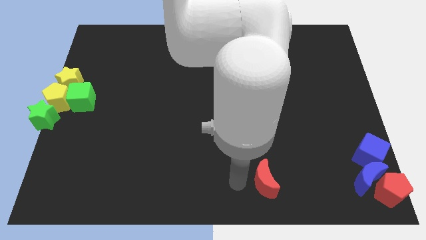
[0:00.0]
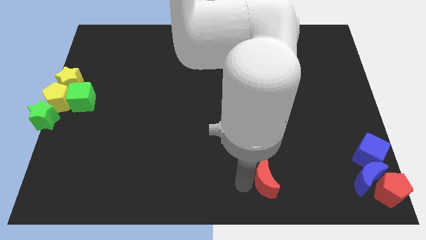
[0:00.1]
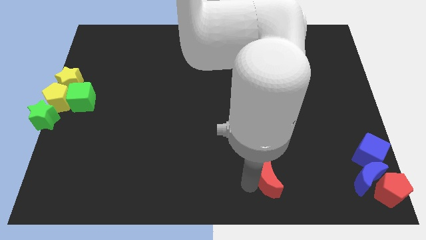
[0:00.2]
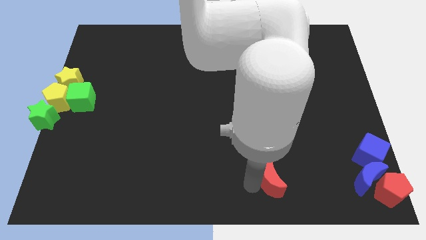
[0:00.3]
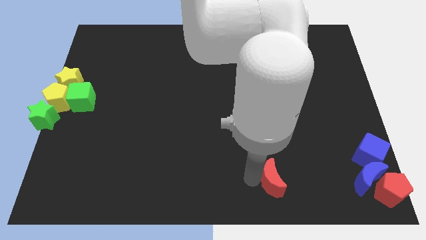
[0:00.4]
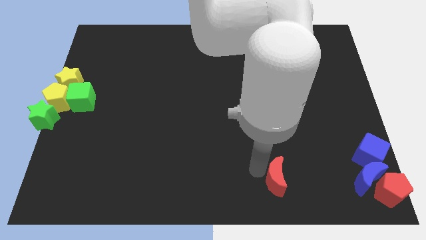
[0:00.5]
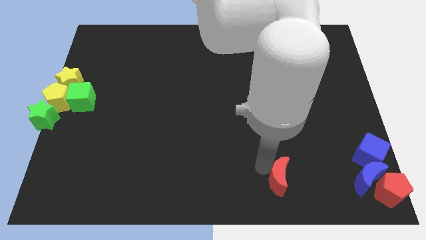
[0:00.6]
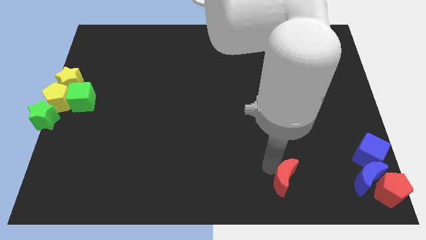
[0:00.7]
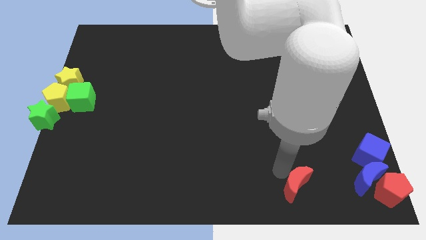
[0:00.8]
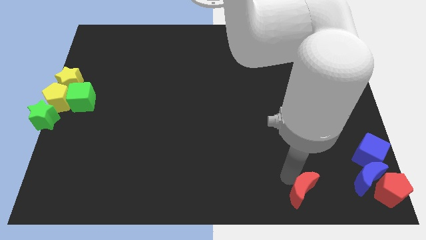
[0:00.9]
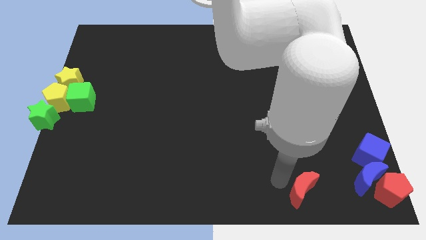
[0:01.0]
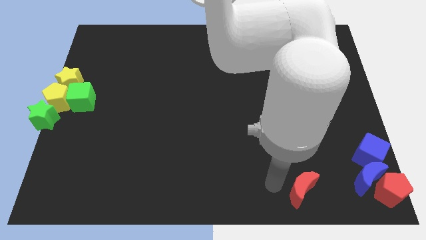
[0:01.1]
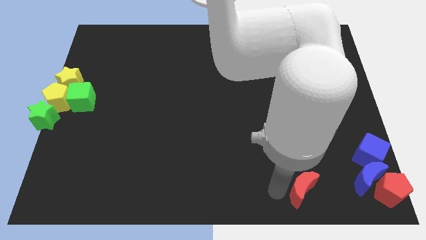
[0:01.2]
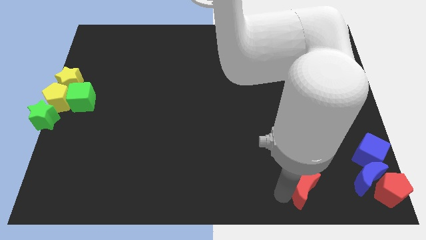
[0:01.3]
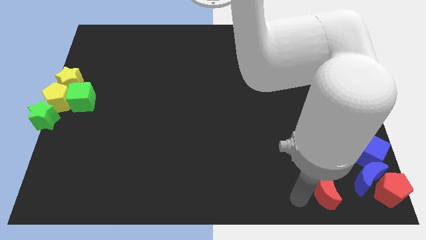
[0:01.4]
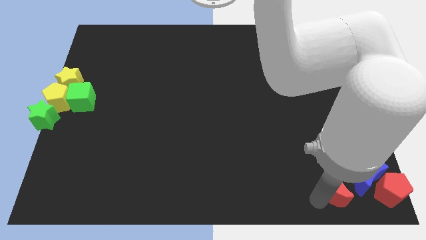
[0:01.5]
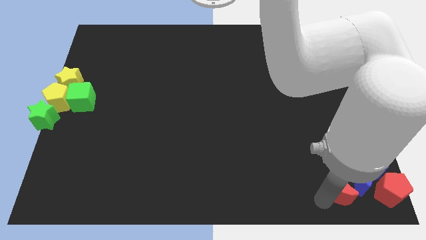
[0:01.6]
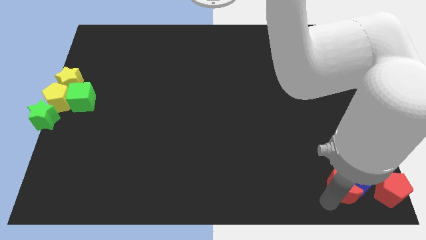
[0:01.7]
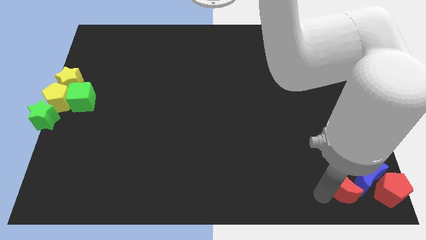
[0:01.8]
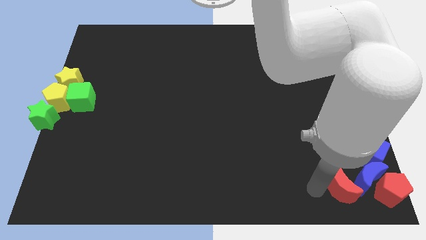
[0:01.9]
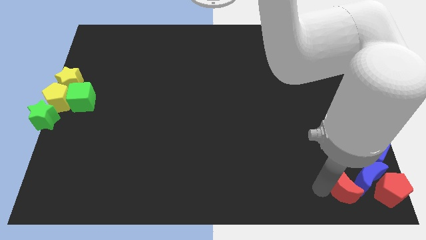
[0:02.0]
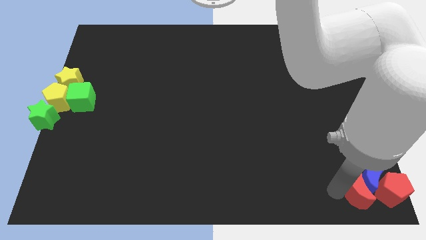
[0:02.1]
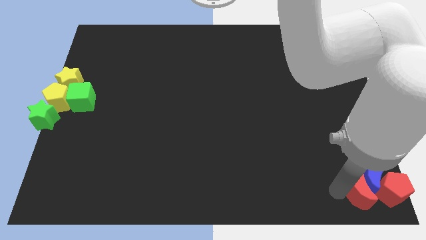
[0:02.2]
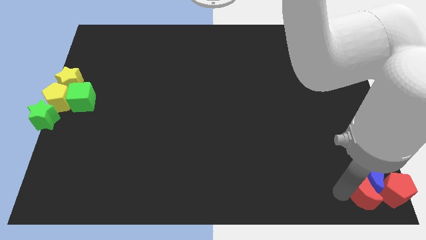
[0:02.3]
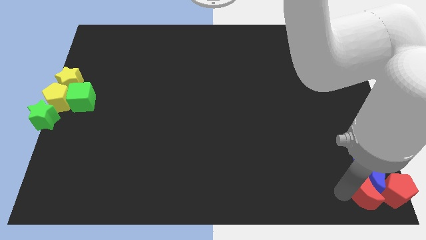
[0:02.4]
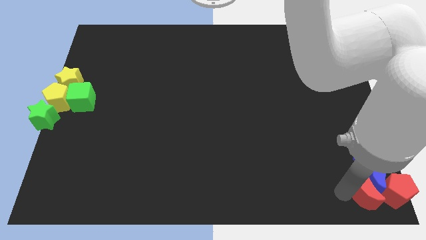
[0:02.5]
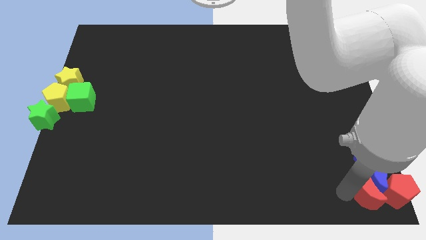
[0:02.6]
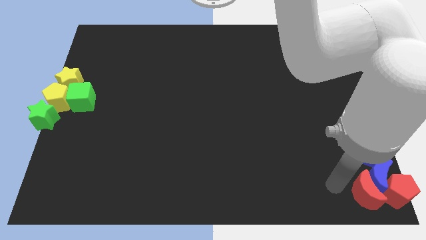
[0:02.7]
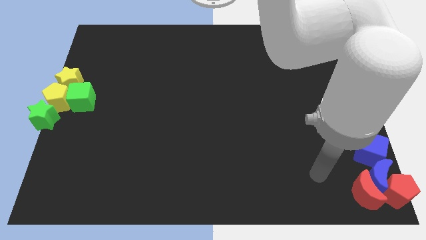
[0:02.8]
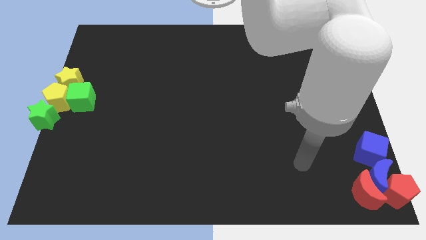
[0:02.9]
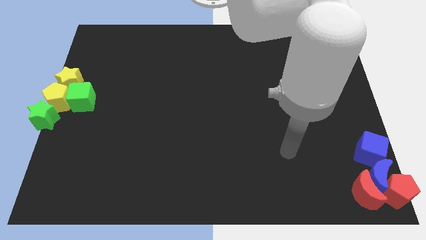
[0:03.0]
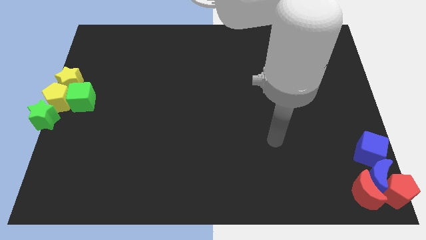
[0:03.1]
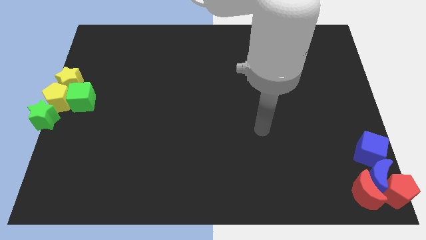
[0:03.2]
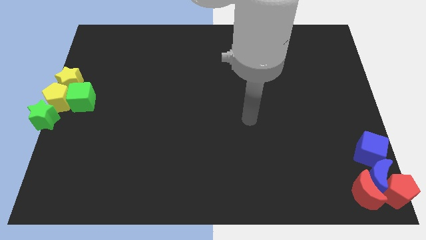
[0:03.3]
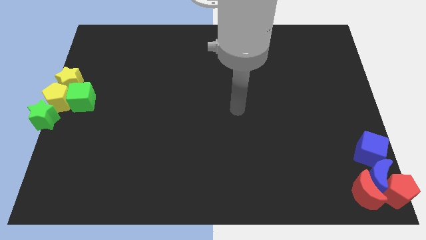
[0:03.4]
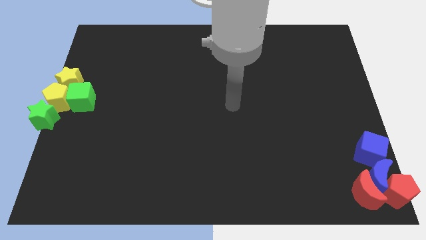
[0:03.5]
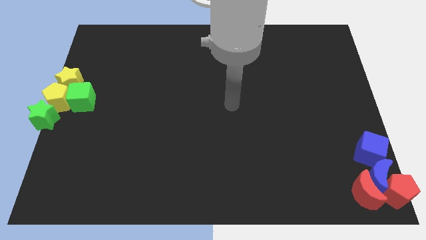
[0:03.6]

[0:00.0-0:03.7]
push the red crescent into the group of blocks at the bottom right corner of the board

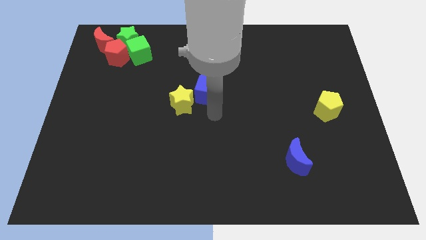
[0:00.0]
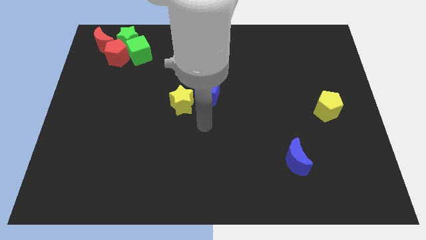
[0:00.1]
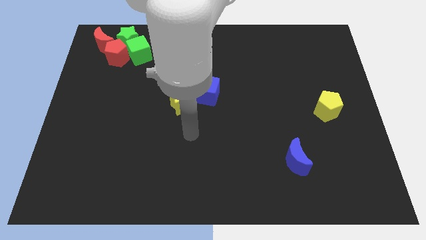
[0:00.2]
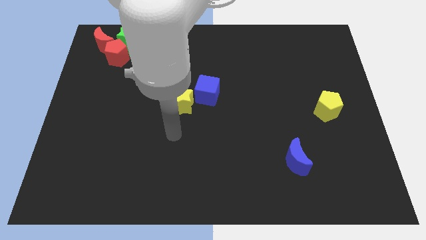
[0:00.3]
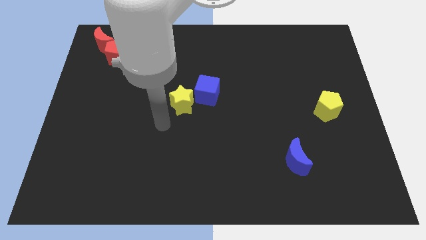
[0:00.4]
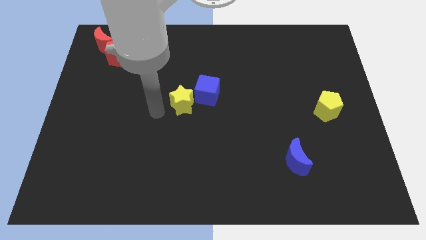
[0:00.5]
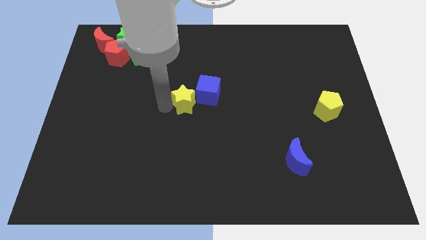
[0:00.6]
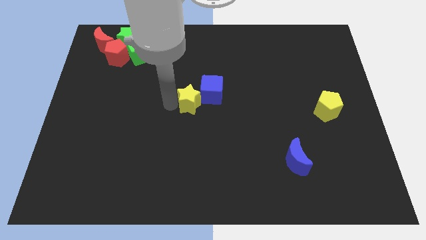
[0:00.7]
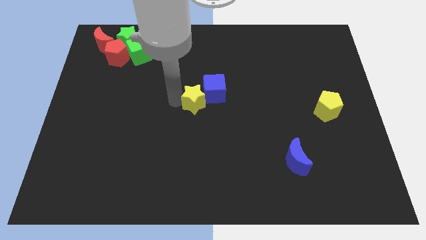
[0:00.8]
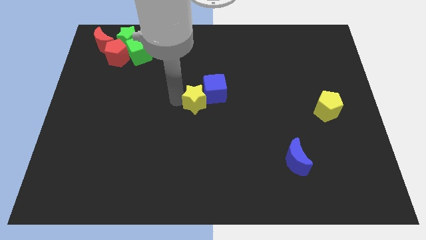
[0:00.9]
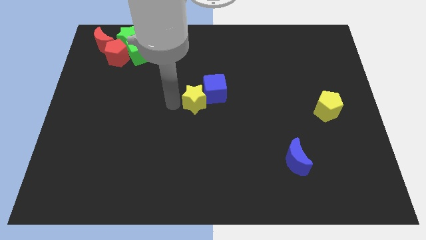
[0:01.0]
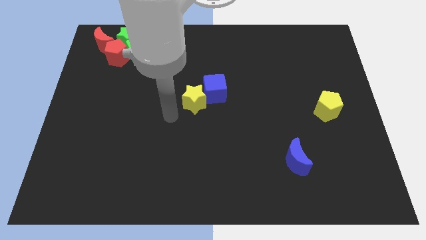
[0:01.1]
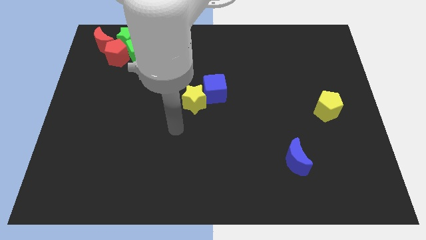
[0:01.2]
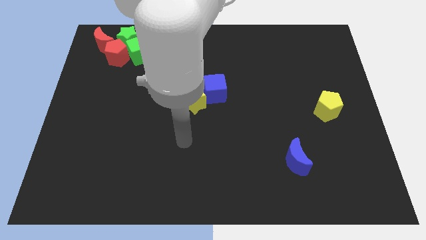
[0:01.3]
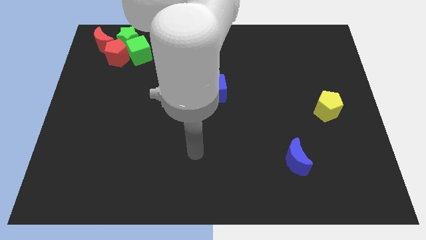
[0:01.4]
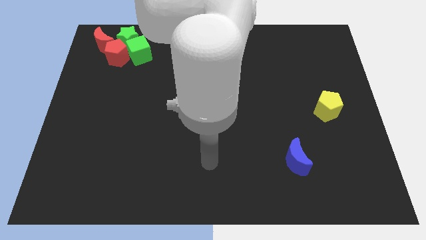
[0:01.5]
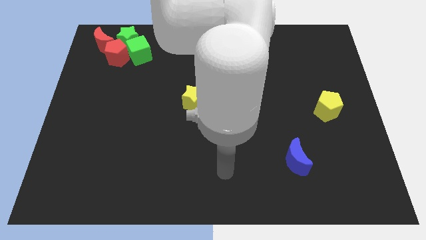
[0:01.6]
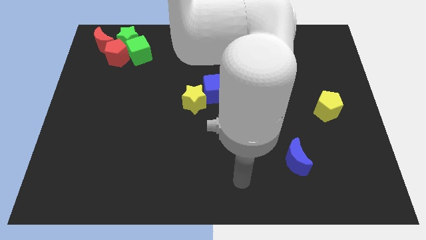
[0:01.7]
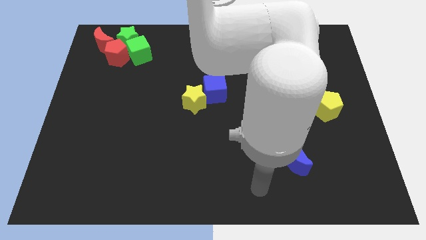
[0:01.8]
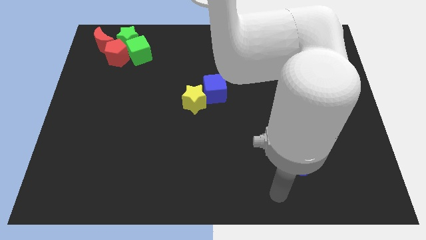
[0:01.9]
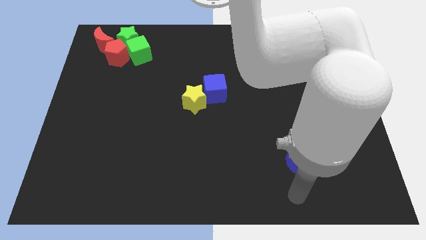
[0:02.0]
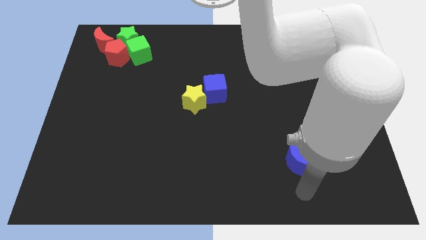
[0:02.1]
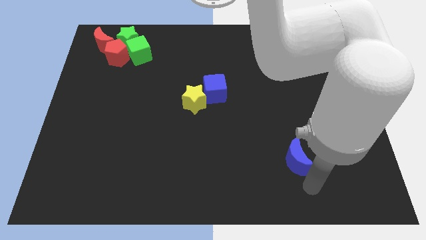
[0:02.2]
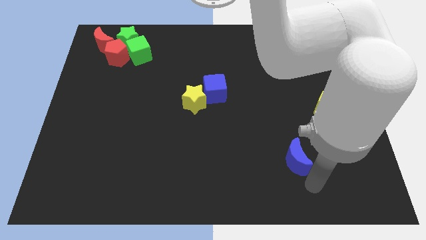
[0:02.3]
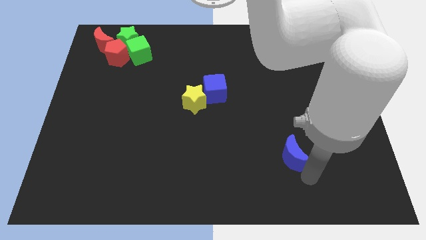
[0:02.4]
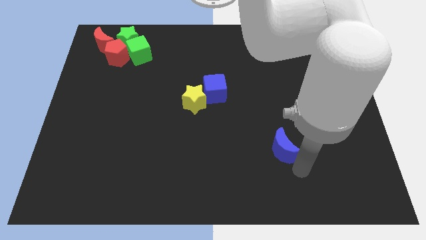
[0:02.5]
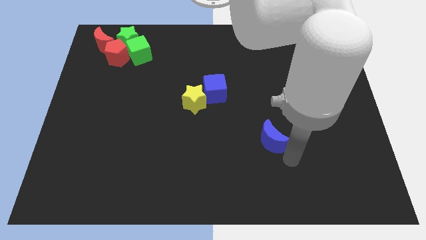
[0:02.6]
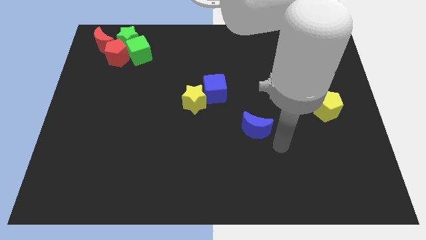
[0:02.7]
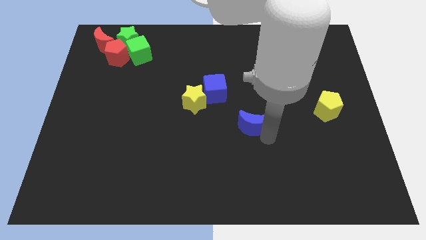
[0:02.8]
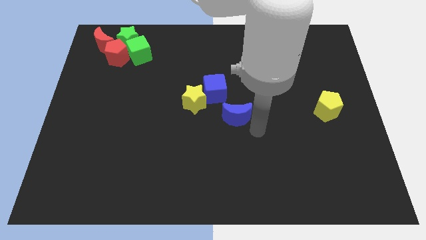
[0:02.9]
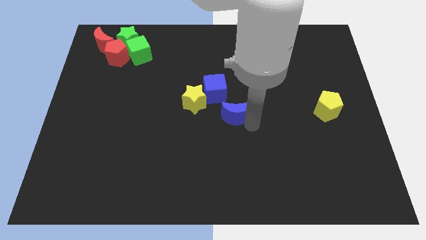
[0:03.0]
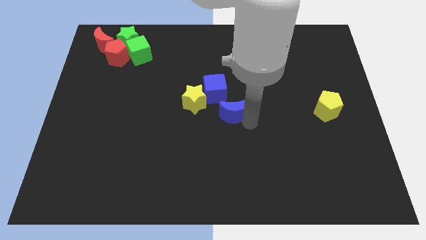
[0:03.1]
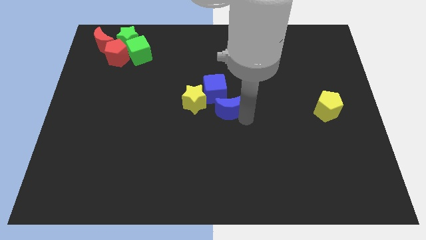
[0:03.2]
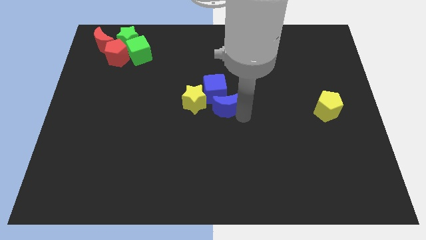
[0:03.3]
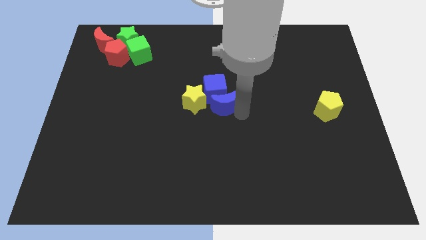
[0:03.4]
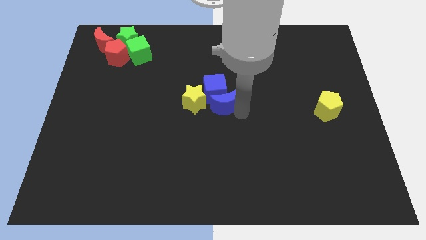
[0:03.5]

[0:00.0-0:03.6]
push the blue crescent into the blue cube

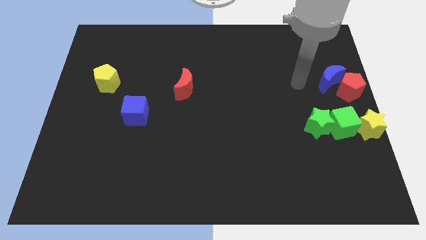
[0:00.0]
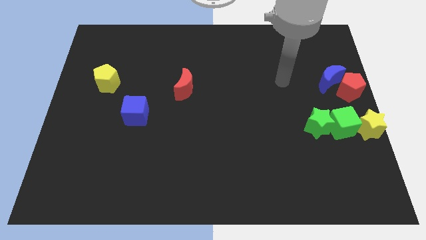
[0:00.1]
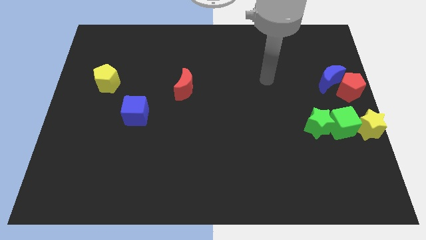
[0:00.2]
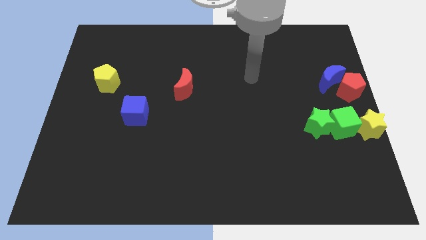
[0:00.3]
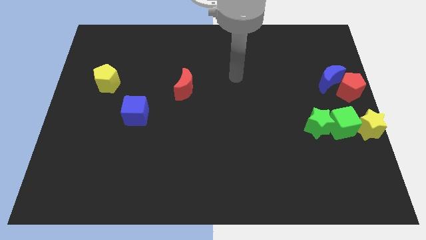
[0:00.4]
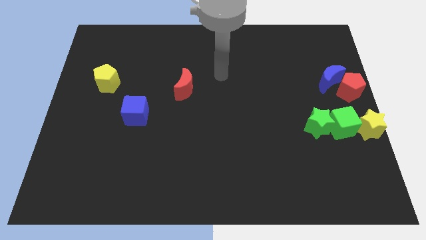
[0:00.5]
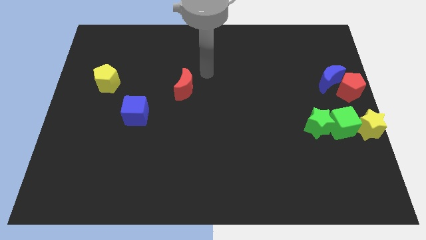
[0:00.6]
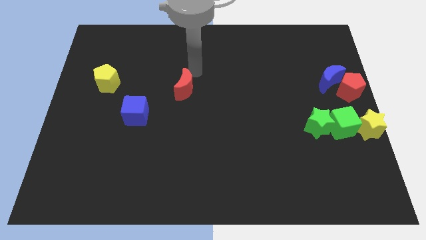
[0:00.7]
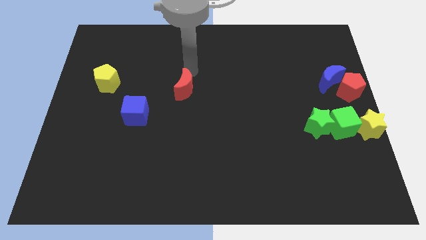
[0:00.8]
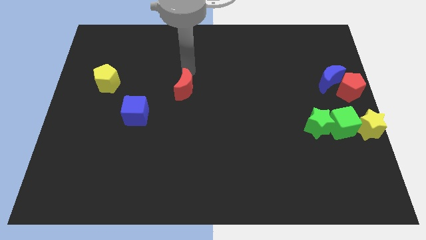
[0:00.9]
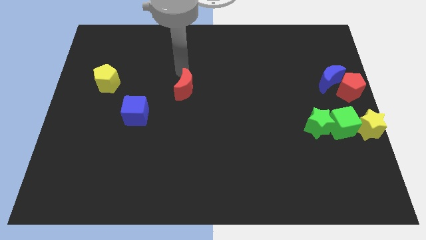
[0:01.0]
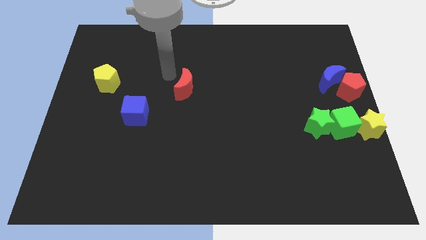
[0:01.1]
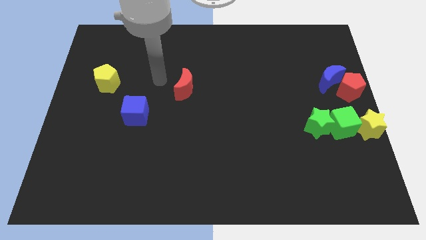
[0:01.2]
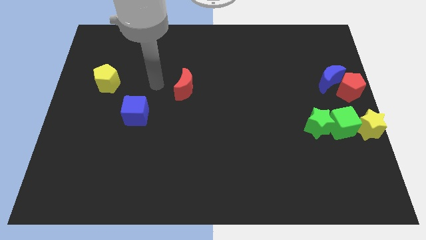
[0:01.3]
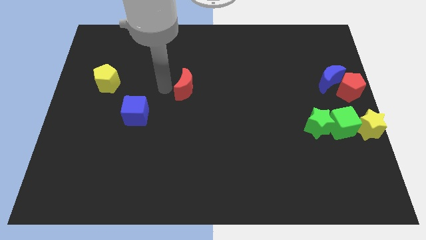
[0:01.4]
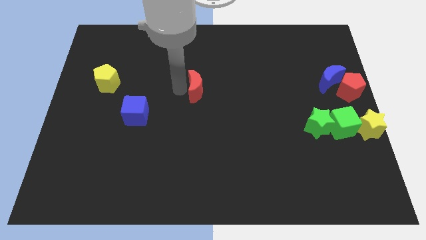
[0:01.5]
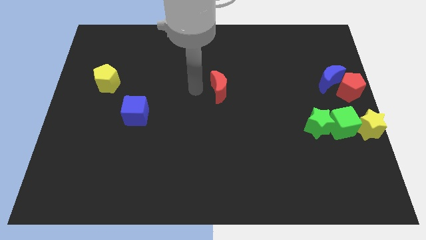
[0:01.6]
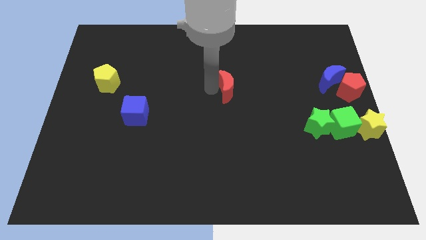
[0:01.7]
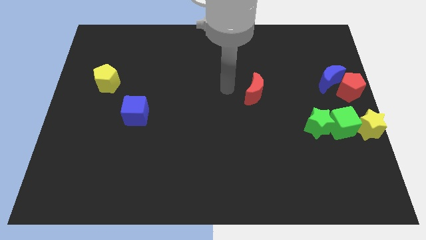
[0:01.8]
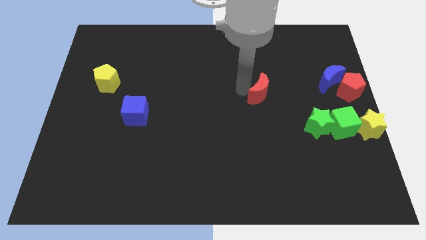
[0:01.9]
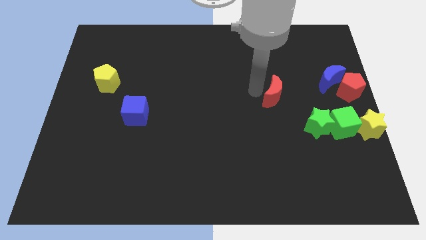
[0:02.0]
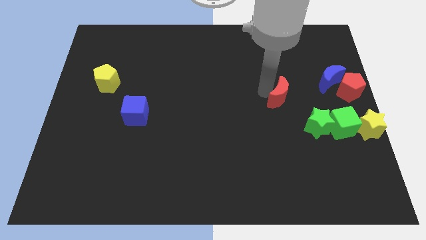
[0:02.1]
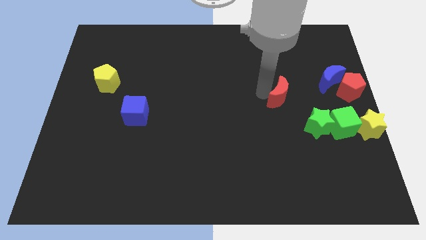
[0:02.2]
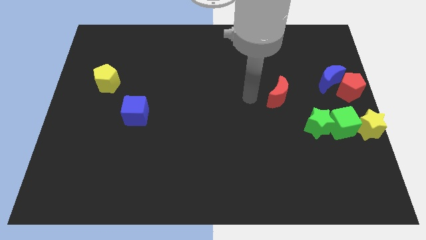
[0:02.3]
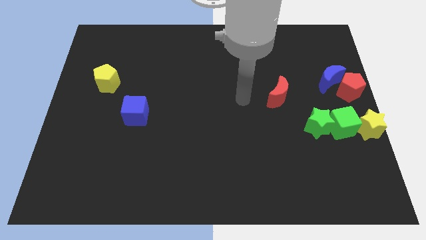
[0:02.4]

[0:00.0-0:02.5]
push the red crescent to the top left of the green star
